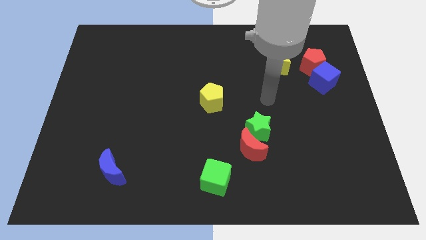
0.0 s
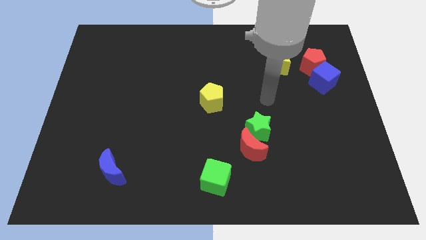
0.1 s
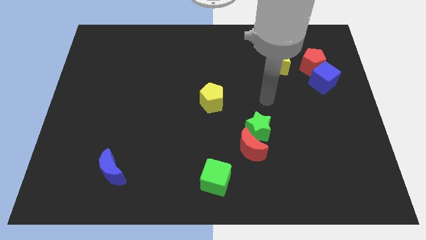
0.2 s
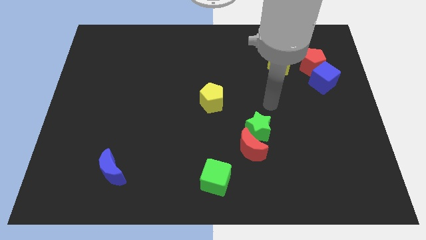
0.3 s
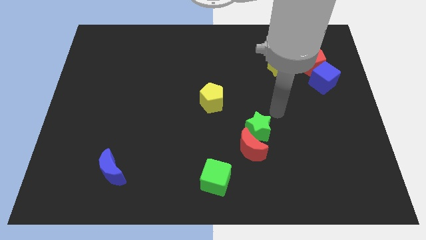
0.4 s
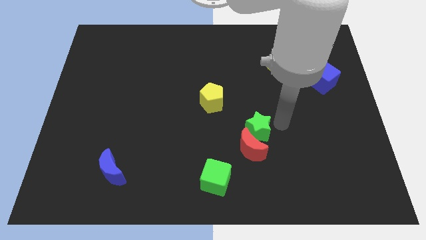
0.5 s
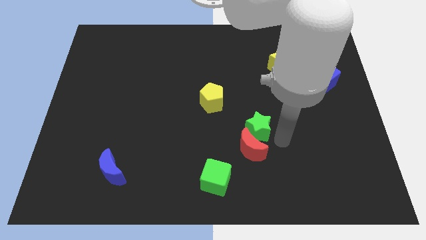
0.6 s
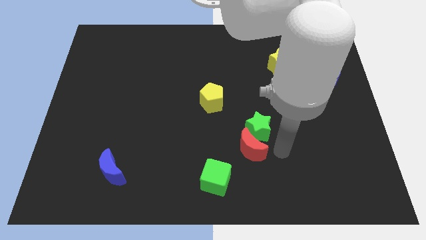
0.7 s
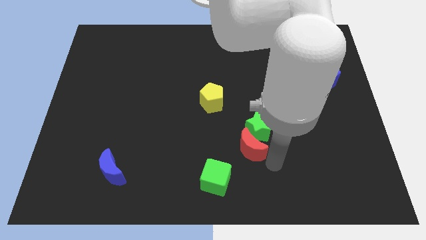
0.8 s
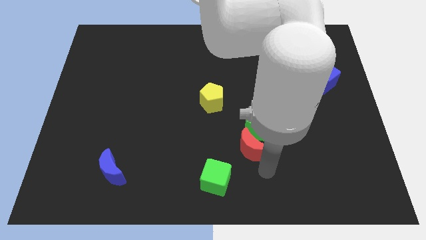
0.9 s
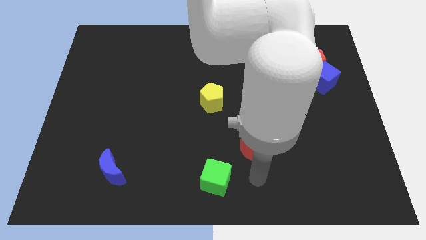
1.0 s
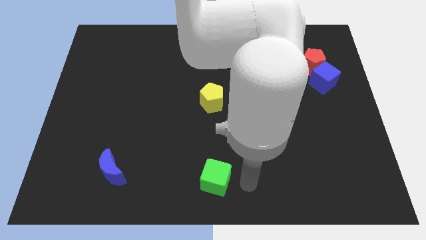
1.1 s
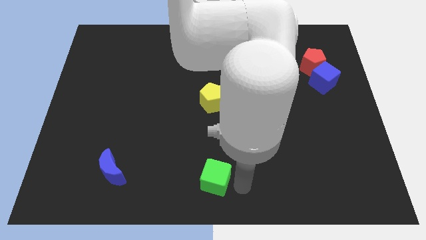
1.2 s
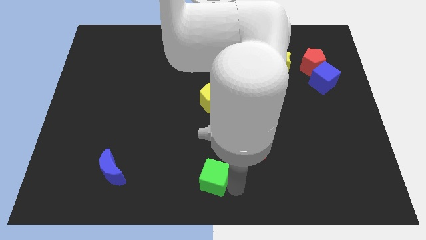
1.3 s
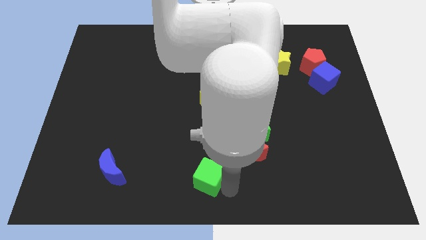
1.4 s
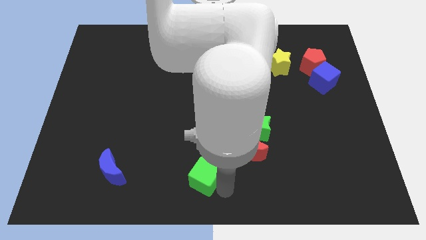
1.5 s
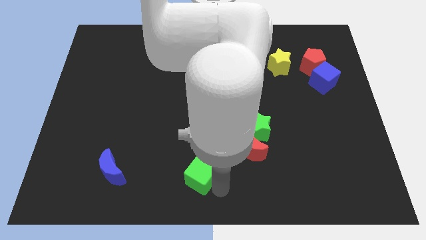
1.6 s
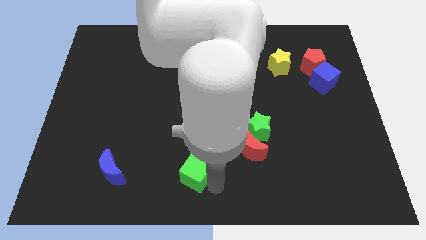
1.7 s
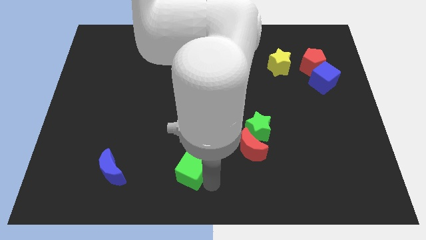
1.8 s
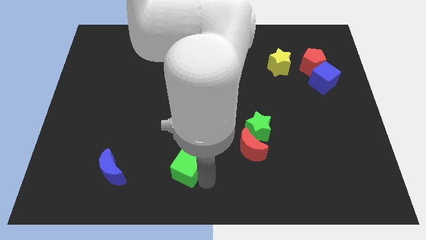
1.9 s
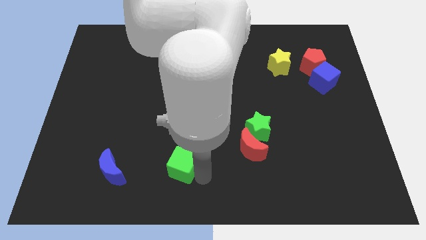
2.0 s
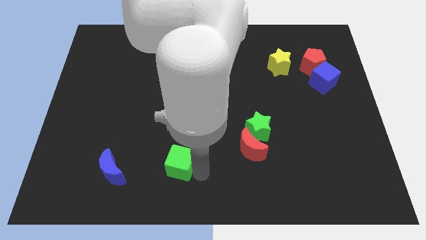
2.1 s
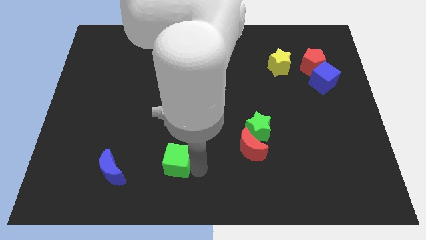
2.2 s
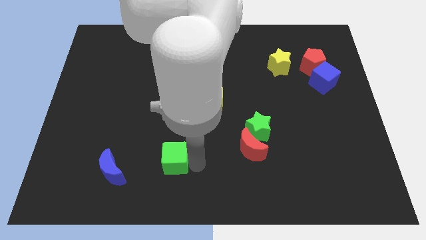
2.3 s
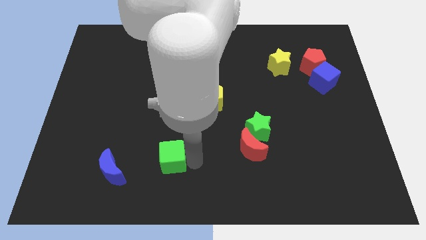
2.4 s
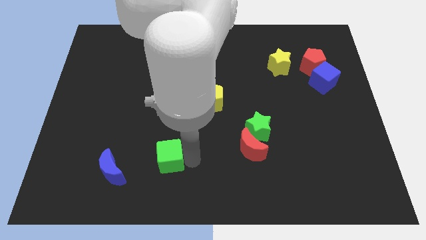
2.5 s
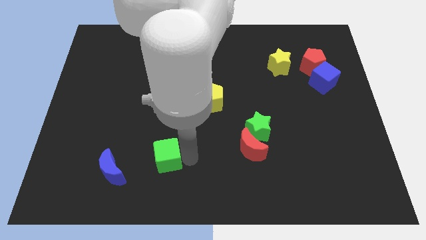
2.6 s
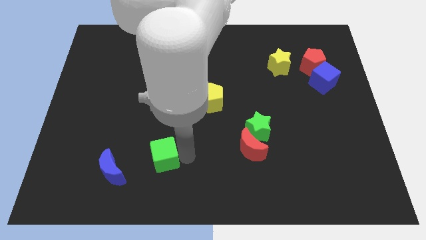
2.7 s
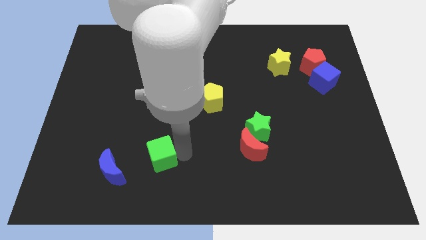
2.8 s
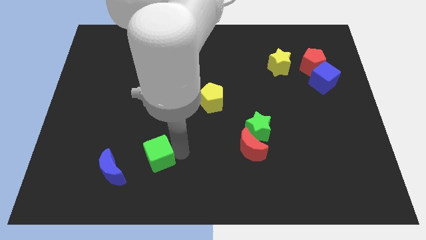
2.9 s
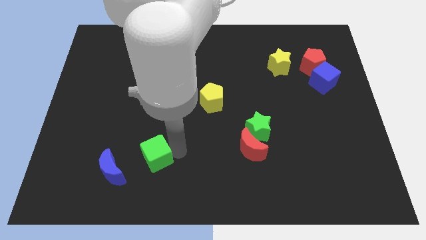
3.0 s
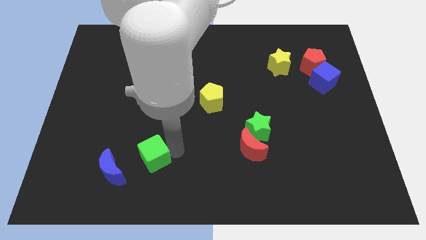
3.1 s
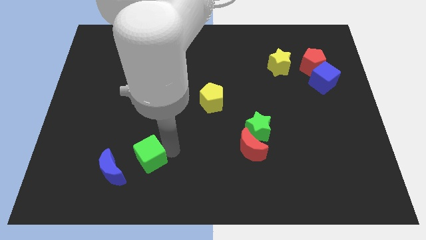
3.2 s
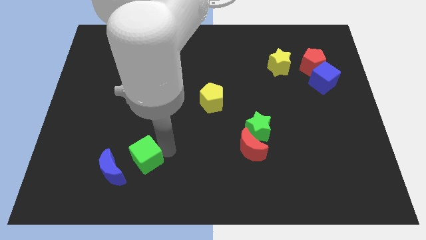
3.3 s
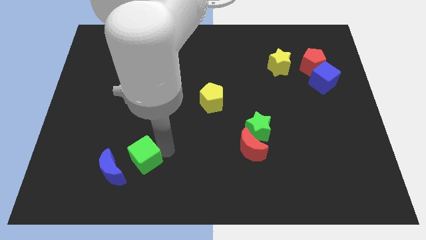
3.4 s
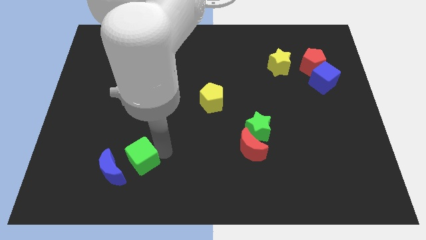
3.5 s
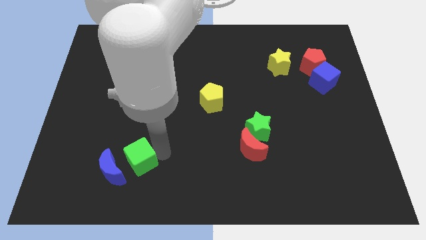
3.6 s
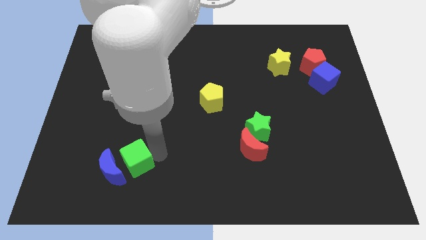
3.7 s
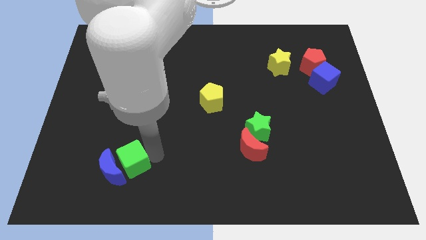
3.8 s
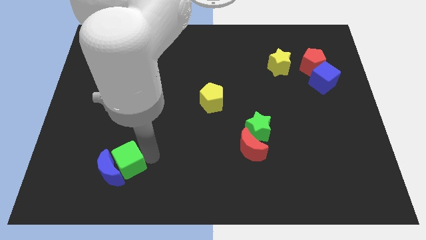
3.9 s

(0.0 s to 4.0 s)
push the green cube towards the blue moon

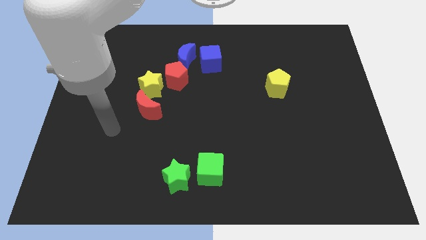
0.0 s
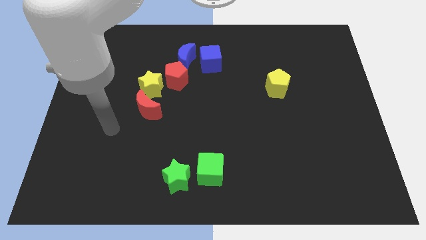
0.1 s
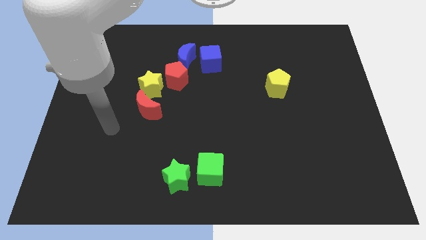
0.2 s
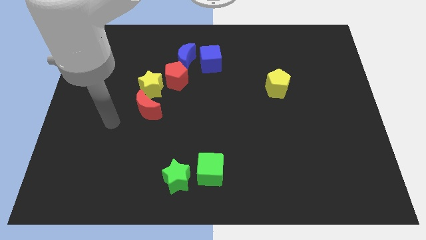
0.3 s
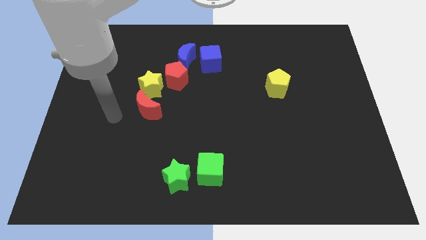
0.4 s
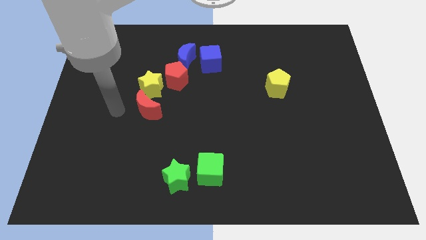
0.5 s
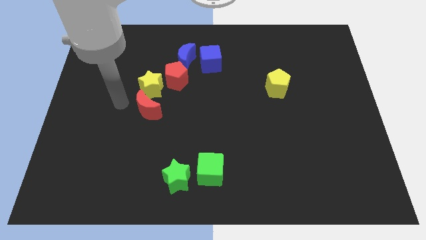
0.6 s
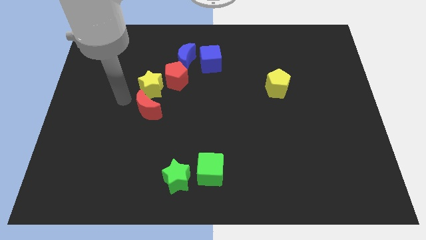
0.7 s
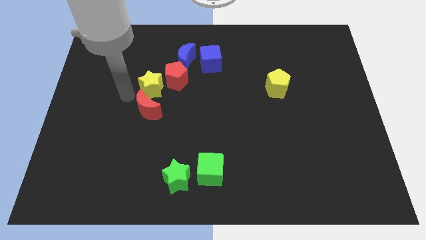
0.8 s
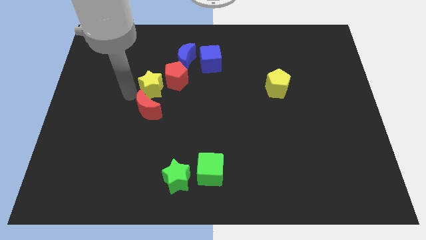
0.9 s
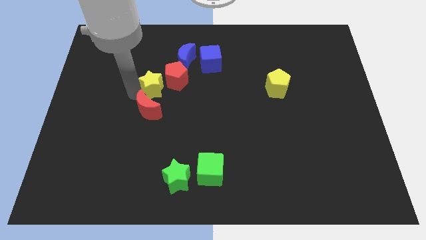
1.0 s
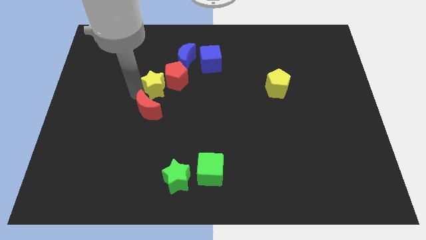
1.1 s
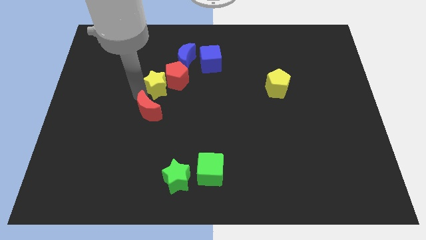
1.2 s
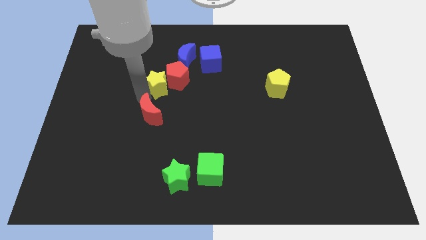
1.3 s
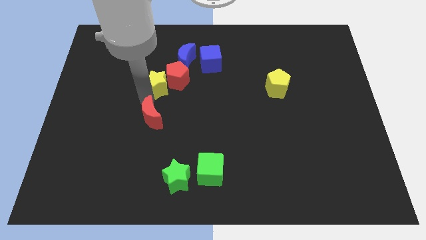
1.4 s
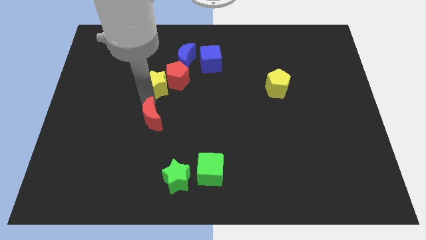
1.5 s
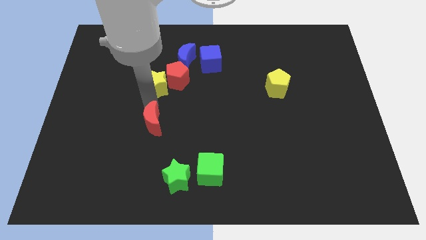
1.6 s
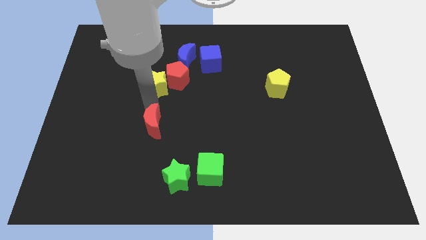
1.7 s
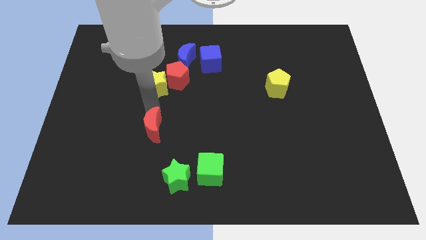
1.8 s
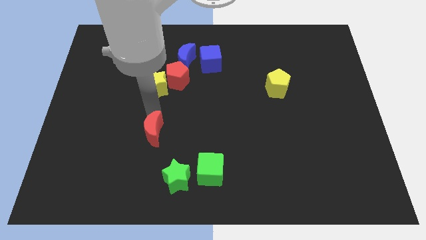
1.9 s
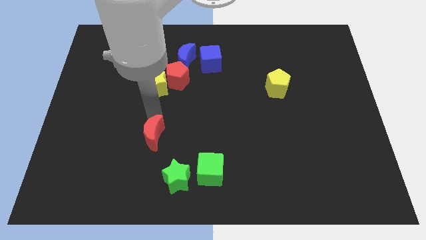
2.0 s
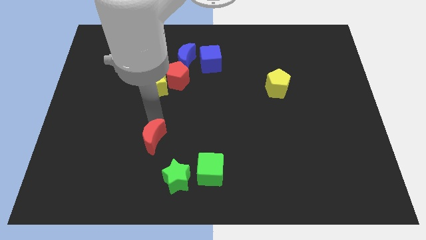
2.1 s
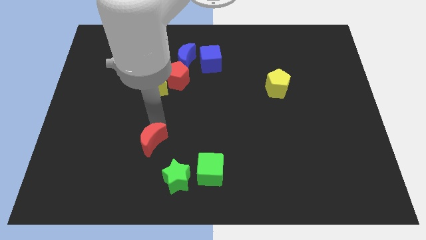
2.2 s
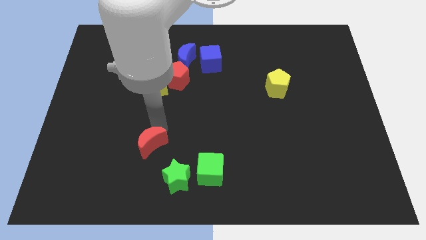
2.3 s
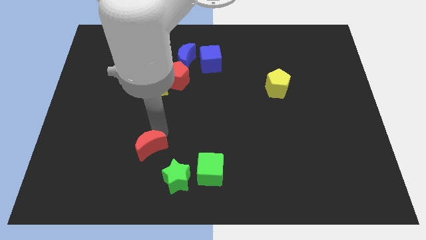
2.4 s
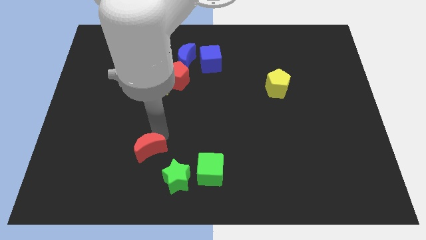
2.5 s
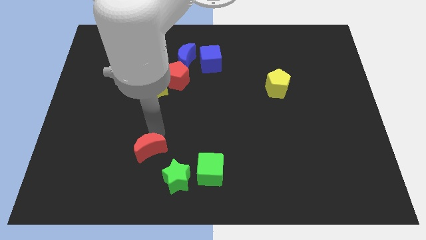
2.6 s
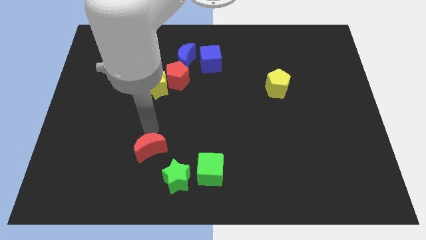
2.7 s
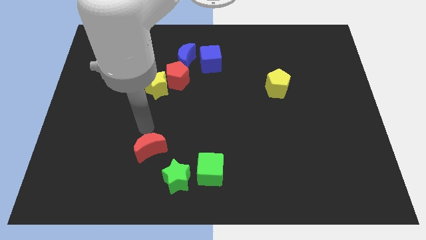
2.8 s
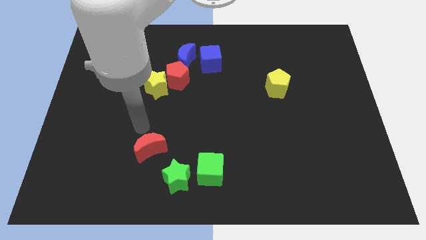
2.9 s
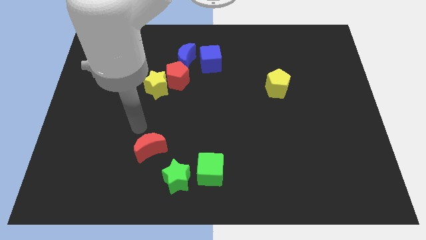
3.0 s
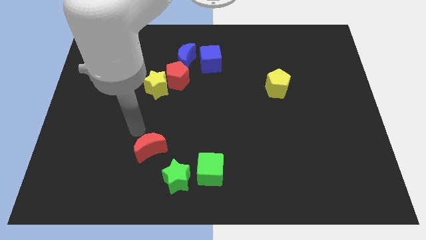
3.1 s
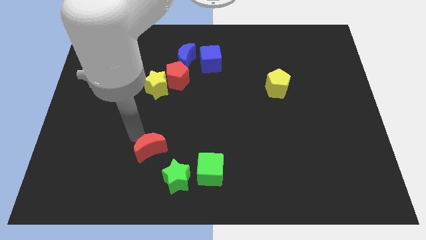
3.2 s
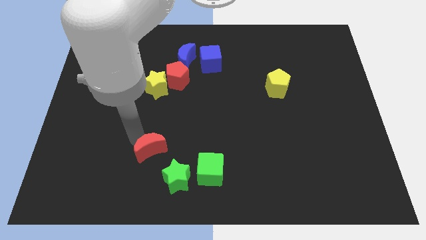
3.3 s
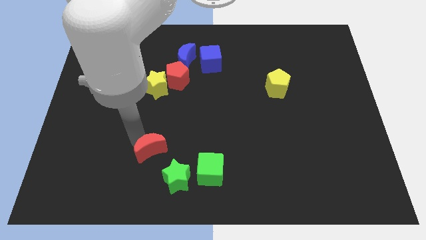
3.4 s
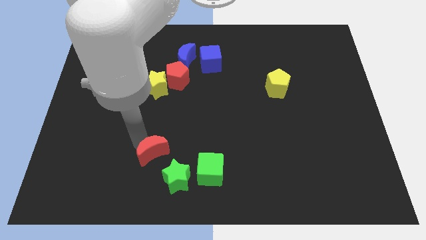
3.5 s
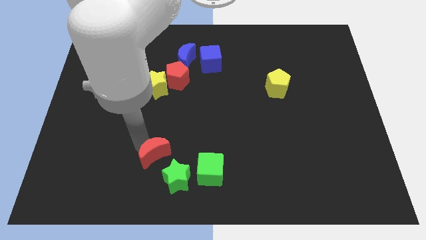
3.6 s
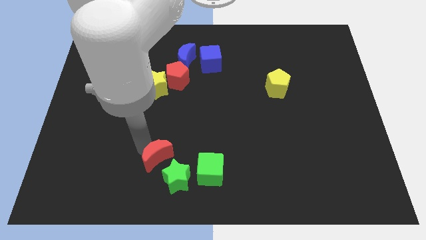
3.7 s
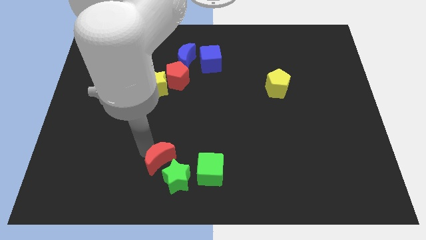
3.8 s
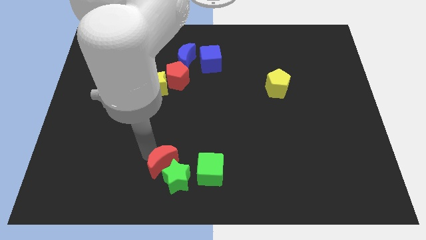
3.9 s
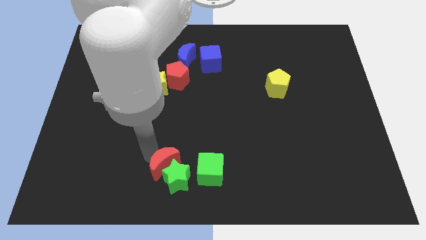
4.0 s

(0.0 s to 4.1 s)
put the red moon to the green star

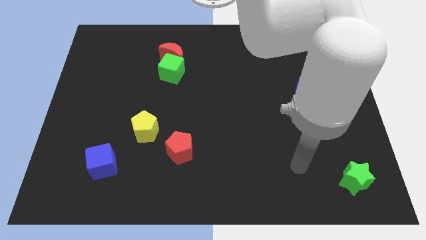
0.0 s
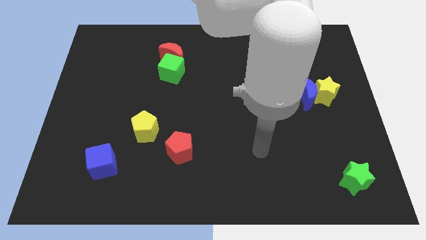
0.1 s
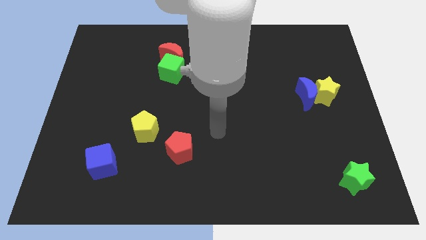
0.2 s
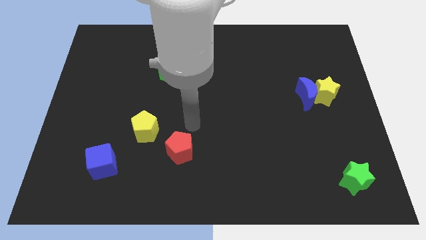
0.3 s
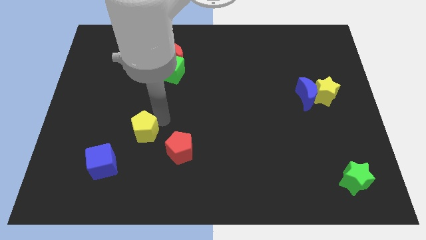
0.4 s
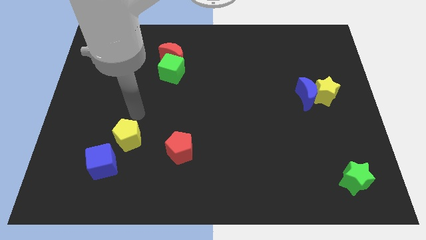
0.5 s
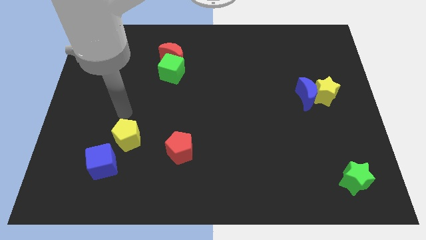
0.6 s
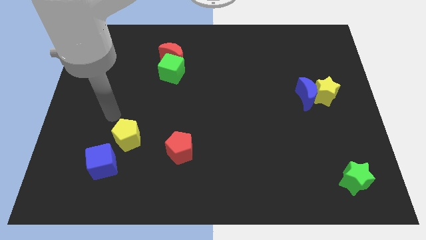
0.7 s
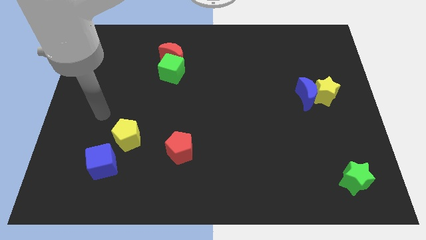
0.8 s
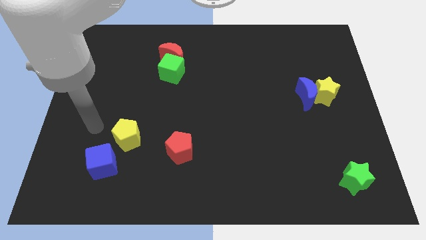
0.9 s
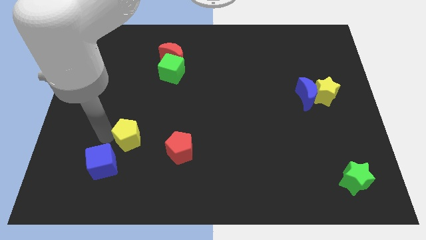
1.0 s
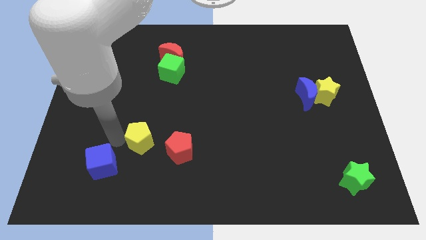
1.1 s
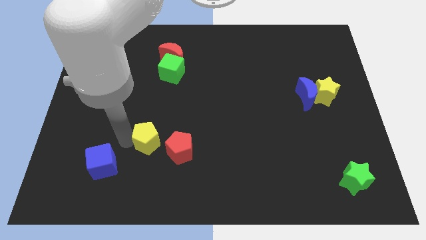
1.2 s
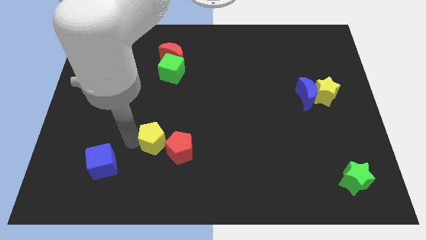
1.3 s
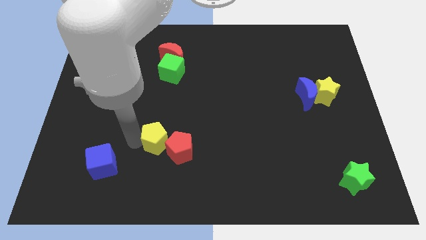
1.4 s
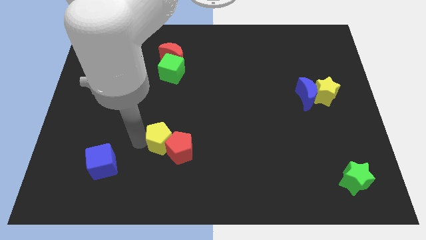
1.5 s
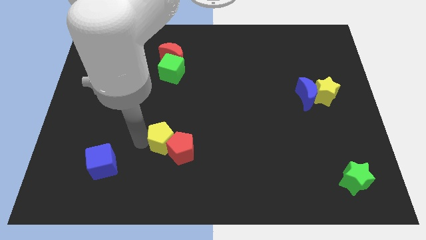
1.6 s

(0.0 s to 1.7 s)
push the yellow pentagon to the red pentagon
